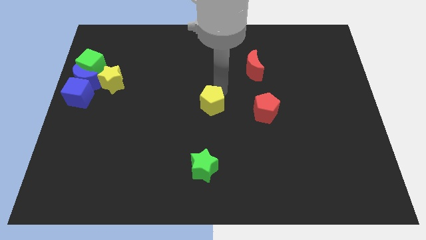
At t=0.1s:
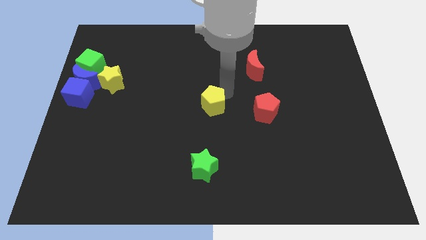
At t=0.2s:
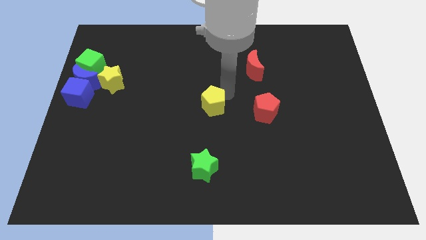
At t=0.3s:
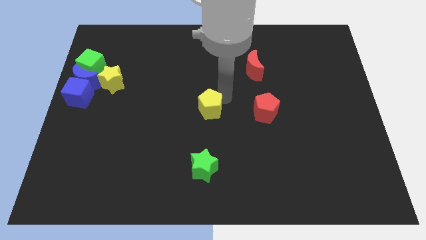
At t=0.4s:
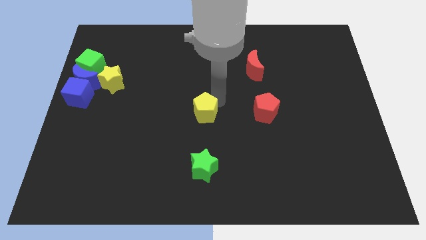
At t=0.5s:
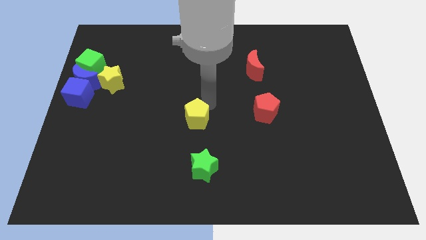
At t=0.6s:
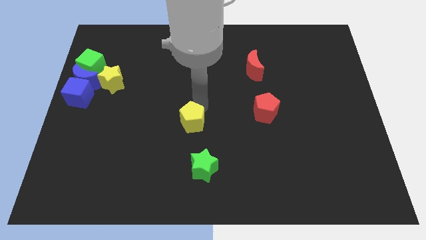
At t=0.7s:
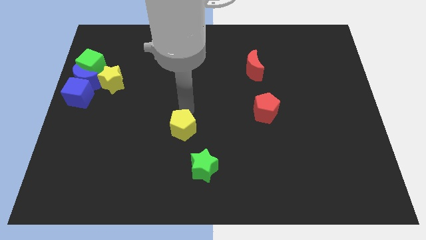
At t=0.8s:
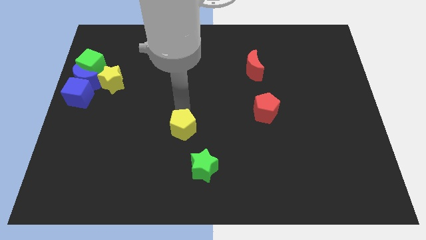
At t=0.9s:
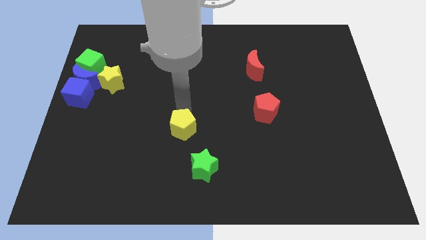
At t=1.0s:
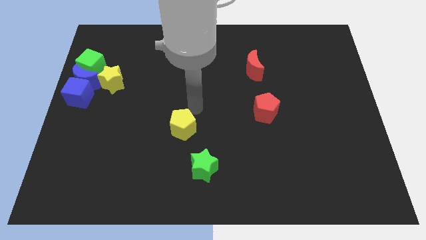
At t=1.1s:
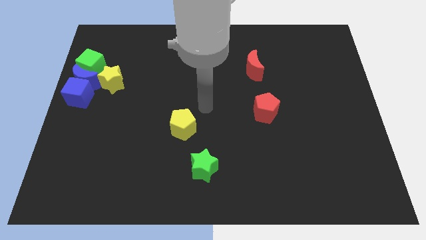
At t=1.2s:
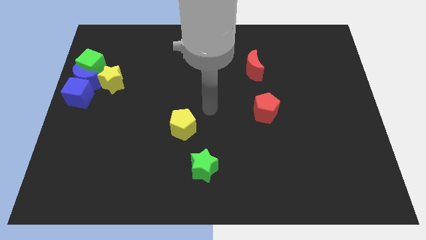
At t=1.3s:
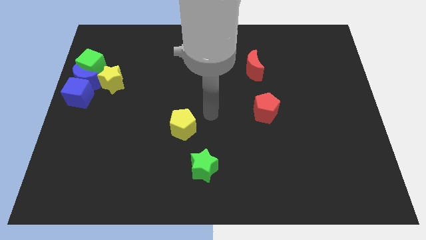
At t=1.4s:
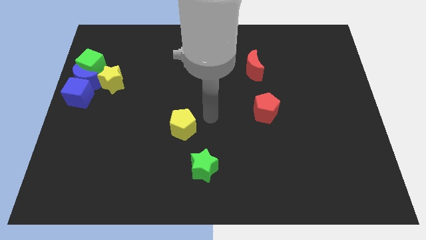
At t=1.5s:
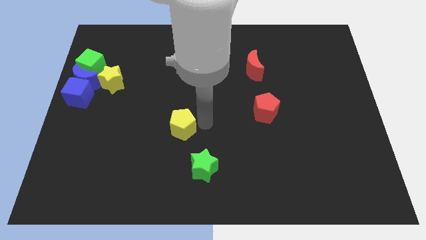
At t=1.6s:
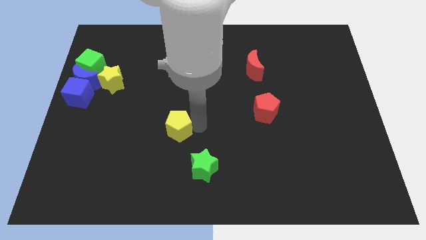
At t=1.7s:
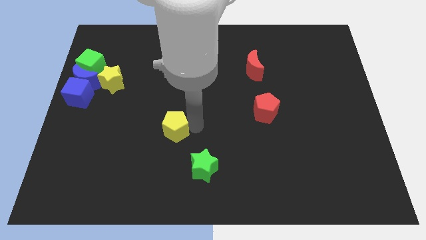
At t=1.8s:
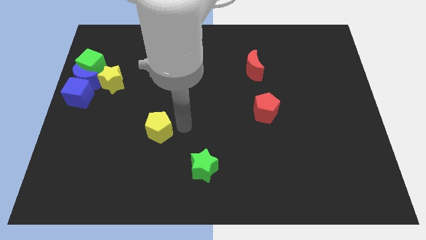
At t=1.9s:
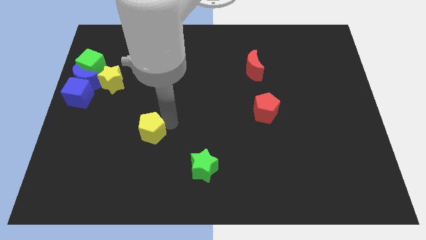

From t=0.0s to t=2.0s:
push the yellow pentagon diagonally top left to the green star

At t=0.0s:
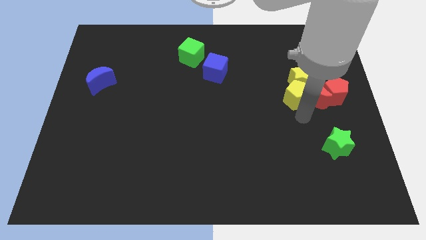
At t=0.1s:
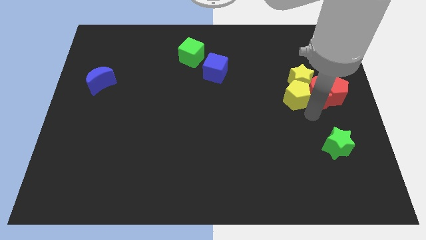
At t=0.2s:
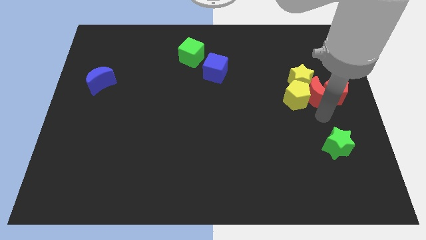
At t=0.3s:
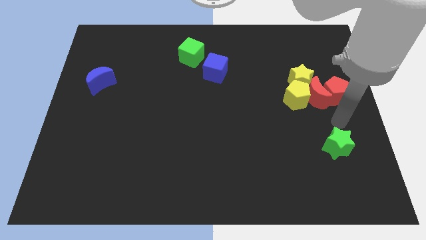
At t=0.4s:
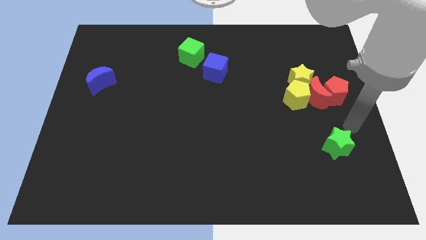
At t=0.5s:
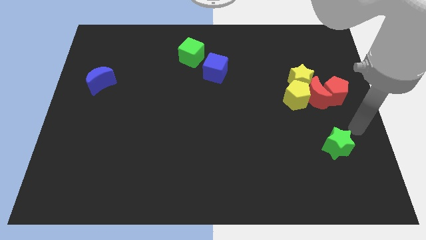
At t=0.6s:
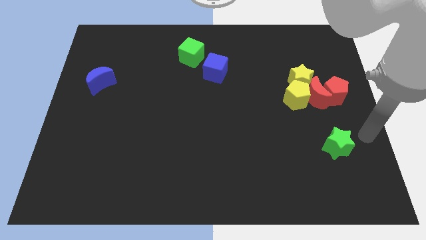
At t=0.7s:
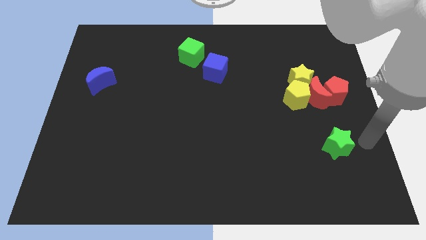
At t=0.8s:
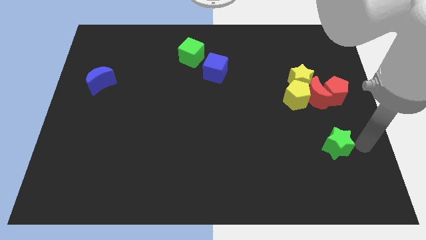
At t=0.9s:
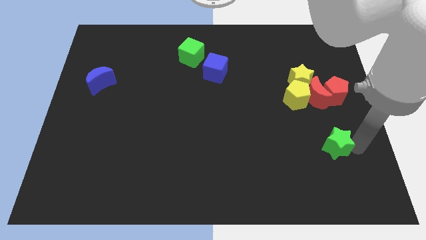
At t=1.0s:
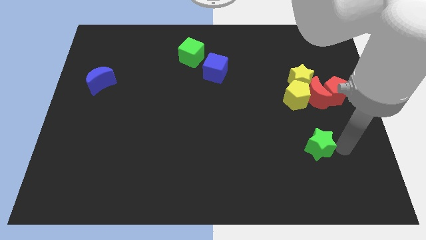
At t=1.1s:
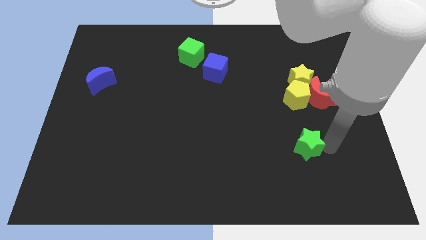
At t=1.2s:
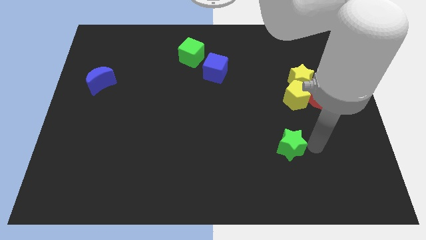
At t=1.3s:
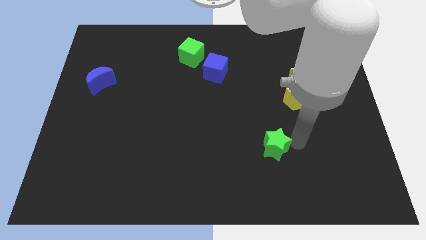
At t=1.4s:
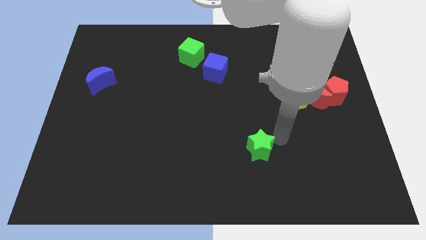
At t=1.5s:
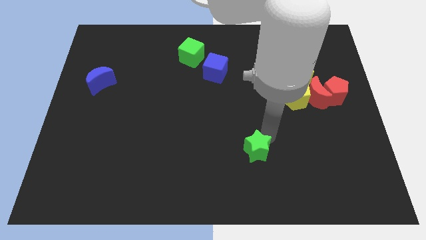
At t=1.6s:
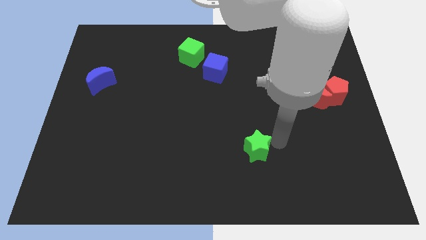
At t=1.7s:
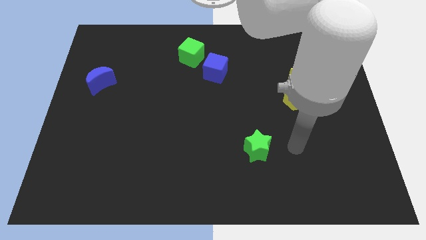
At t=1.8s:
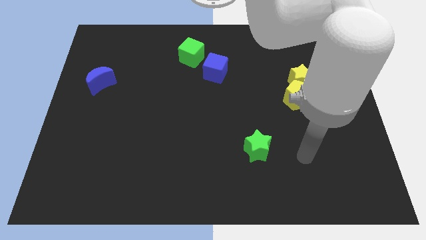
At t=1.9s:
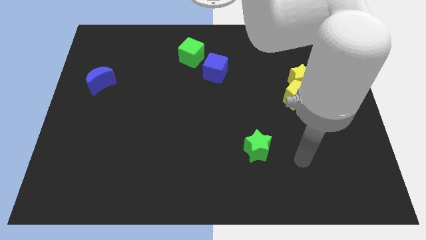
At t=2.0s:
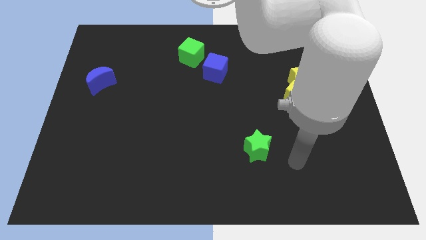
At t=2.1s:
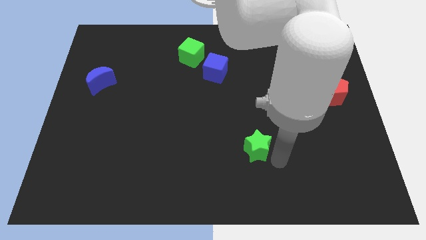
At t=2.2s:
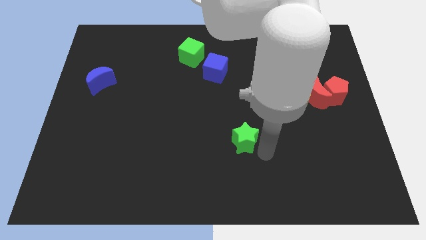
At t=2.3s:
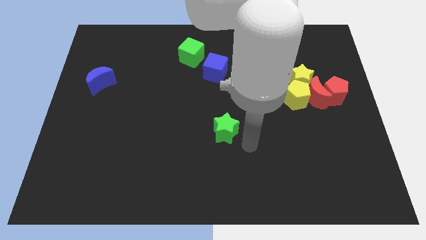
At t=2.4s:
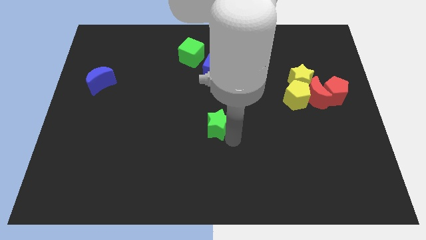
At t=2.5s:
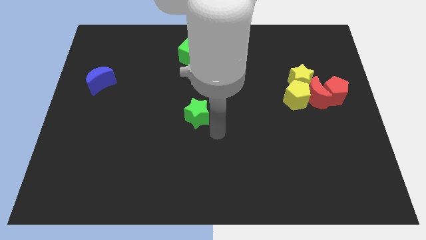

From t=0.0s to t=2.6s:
push green star below blue cube

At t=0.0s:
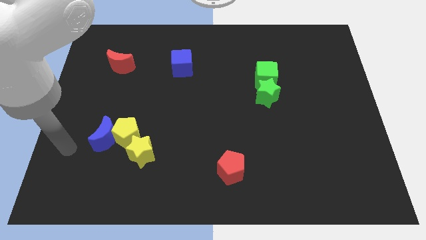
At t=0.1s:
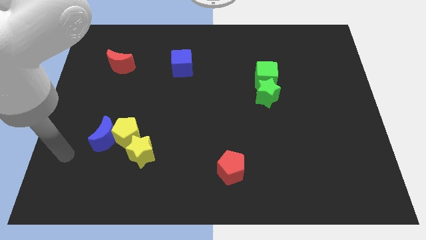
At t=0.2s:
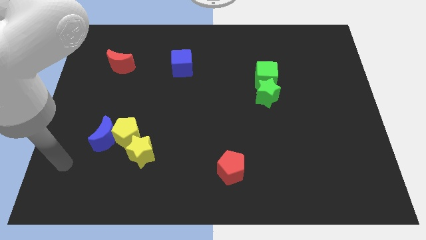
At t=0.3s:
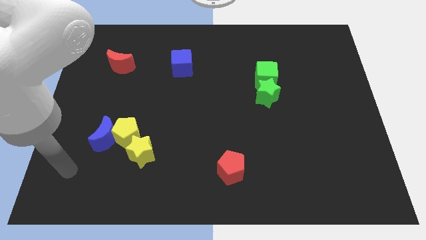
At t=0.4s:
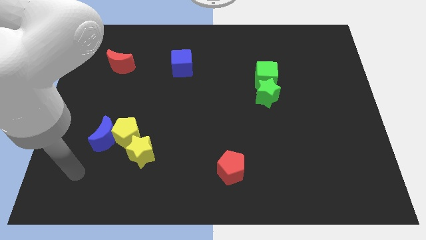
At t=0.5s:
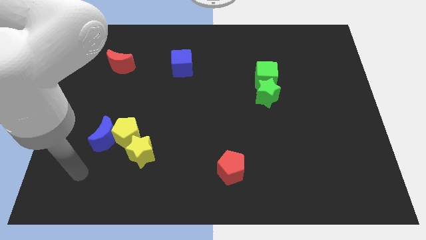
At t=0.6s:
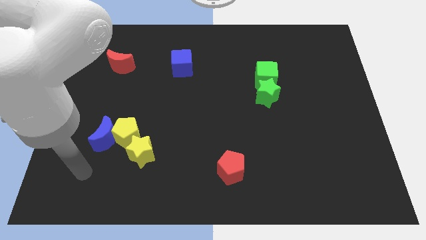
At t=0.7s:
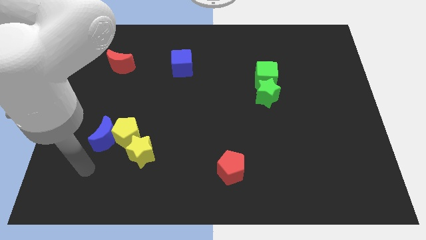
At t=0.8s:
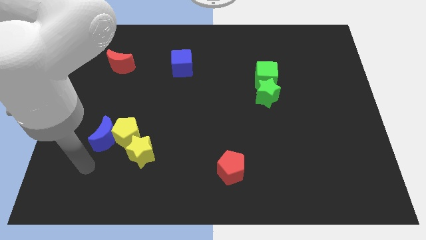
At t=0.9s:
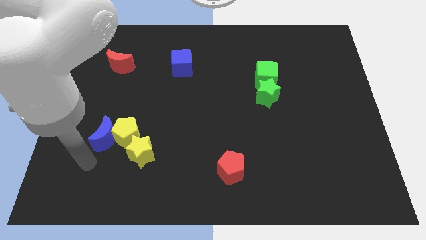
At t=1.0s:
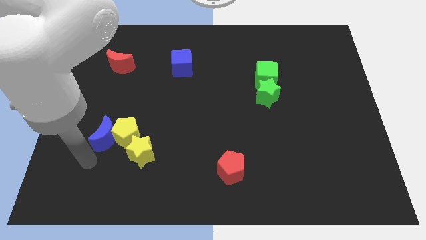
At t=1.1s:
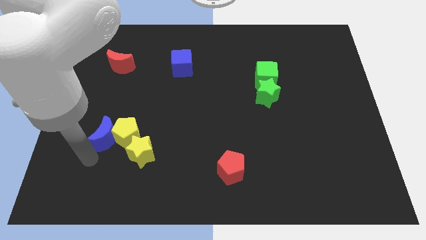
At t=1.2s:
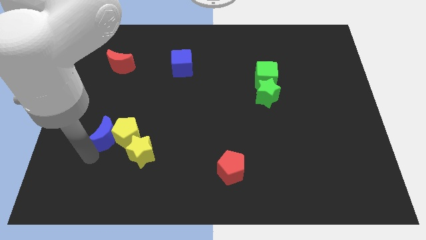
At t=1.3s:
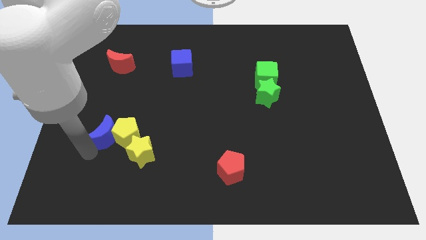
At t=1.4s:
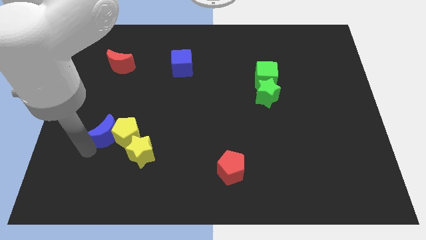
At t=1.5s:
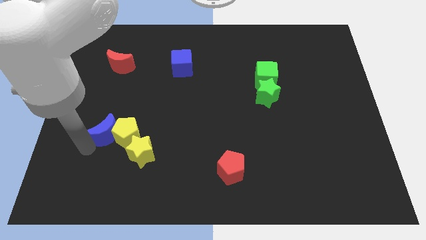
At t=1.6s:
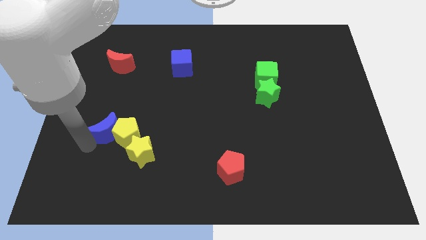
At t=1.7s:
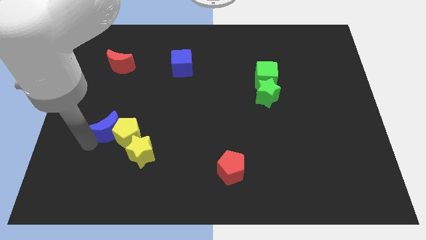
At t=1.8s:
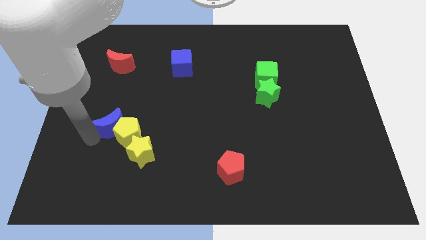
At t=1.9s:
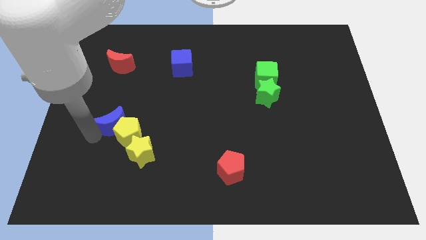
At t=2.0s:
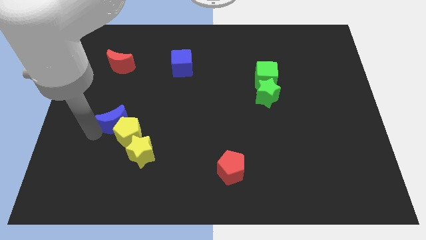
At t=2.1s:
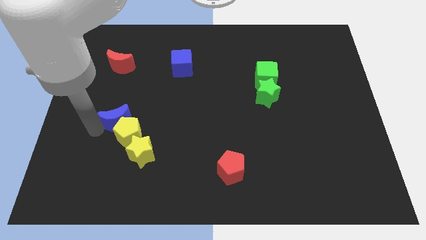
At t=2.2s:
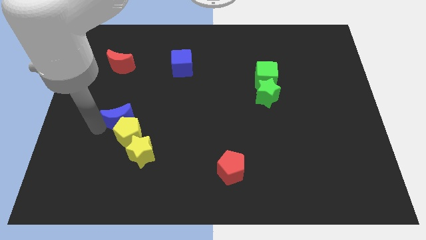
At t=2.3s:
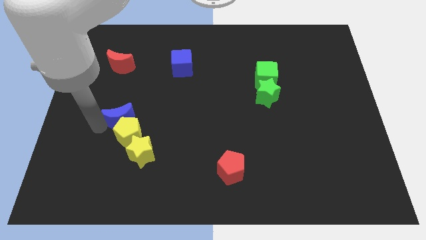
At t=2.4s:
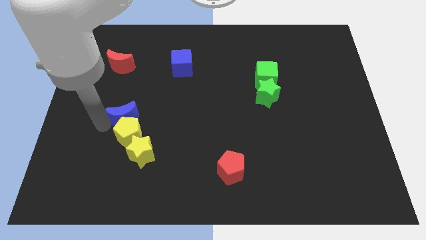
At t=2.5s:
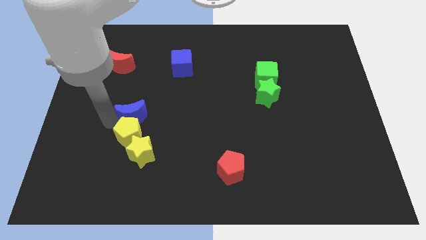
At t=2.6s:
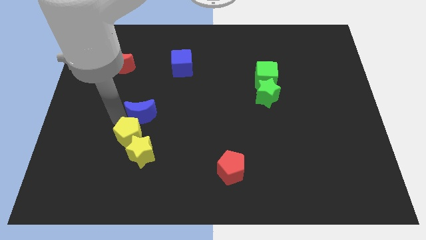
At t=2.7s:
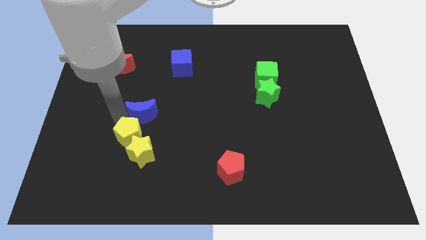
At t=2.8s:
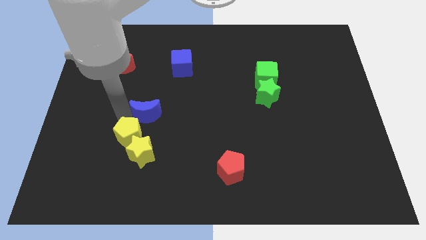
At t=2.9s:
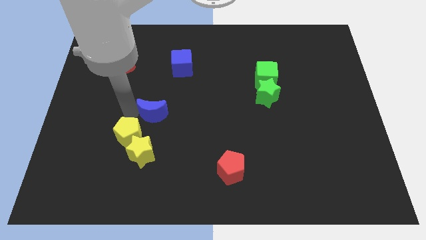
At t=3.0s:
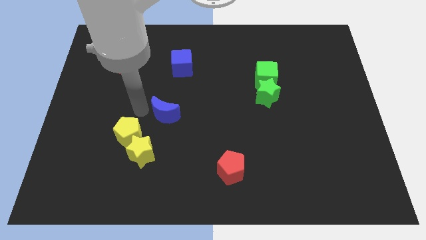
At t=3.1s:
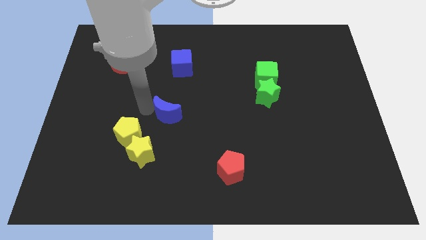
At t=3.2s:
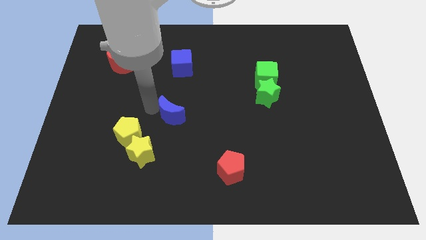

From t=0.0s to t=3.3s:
place the blue moon in between the red blocks

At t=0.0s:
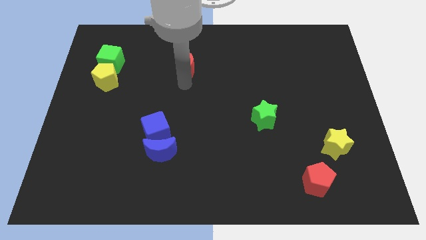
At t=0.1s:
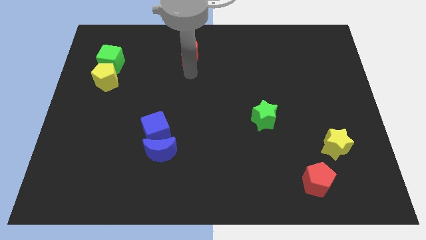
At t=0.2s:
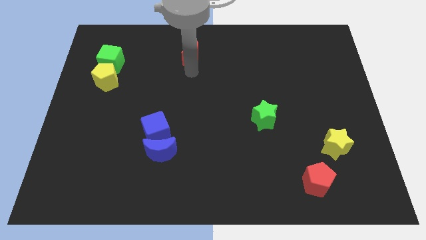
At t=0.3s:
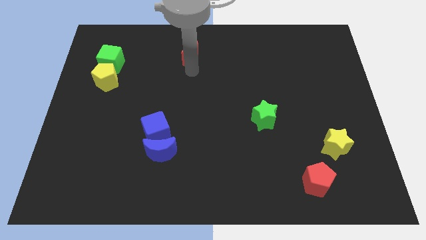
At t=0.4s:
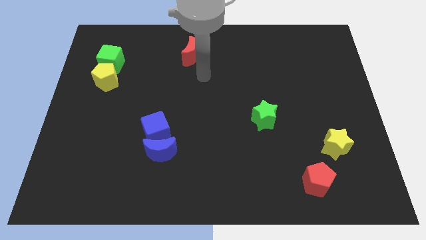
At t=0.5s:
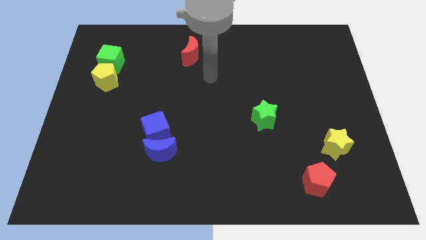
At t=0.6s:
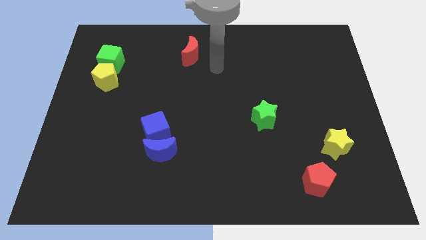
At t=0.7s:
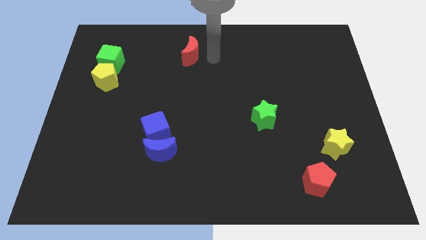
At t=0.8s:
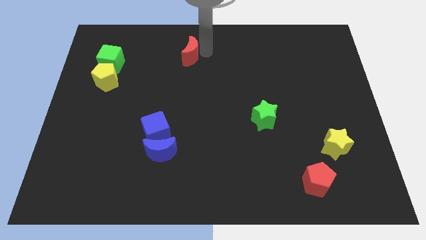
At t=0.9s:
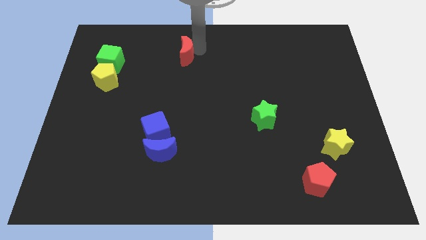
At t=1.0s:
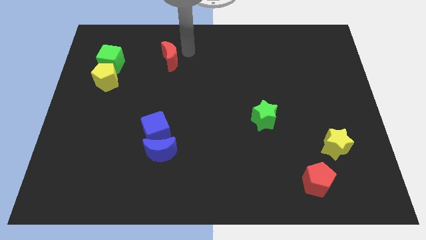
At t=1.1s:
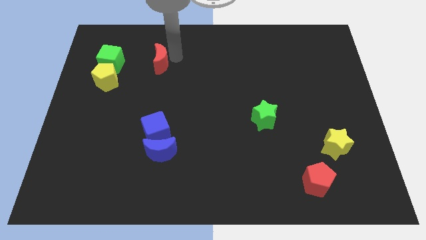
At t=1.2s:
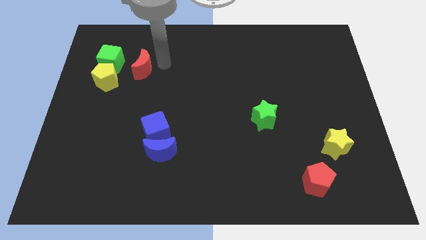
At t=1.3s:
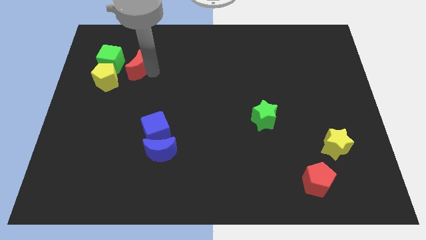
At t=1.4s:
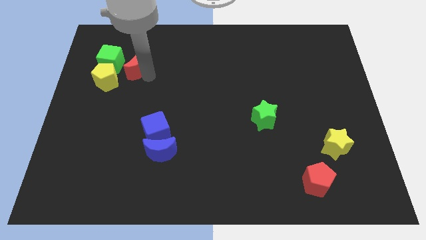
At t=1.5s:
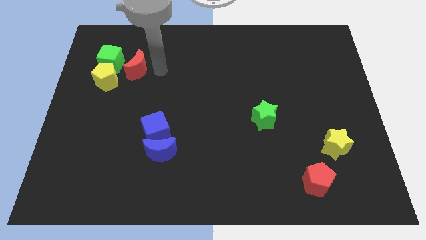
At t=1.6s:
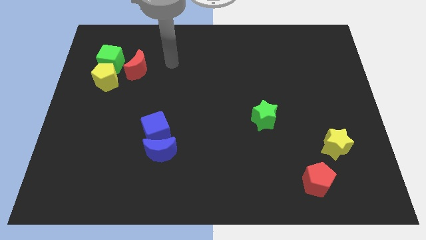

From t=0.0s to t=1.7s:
move the red crescent towards green cube
